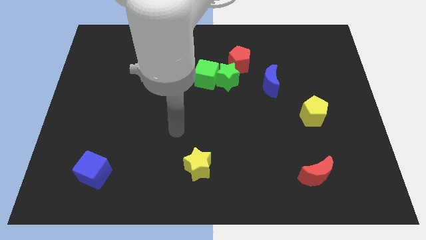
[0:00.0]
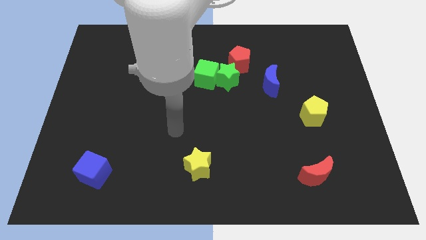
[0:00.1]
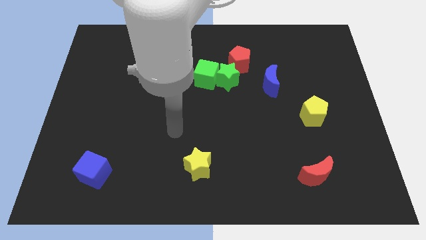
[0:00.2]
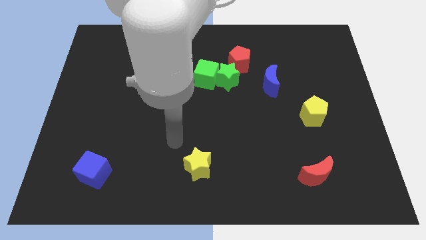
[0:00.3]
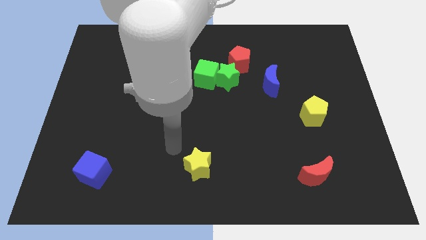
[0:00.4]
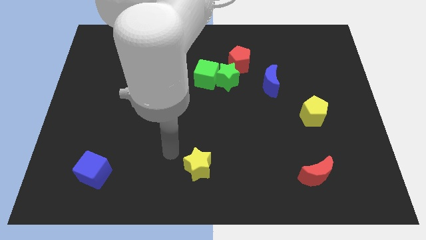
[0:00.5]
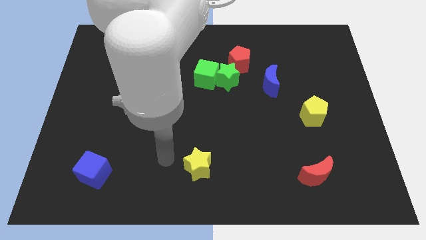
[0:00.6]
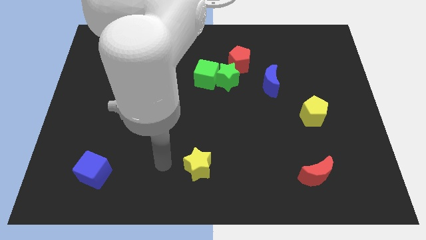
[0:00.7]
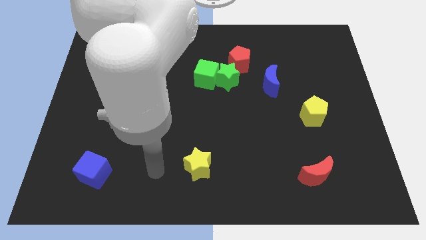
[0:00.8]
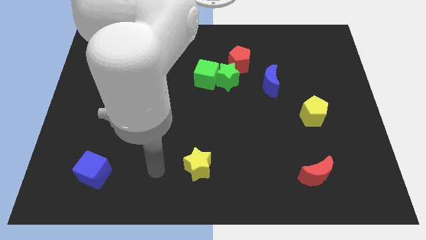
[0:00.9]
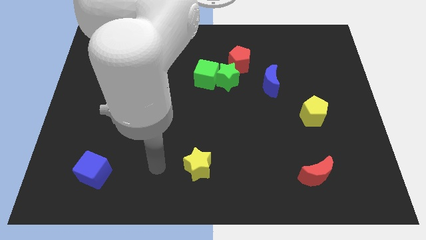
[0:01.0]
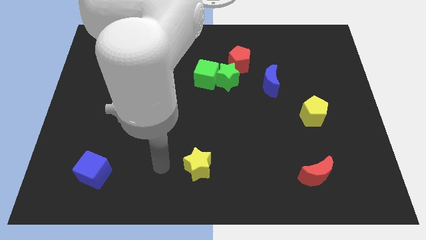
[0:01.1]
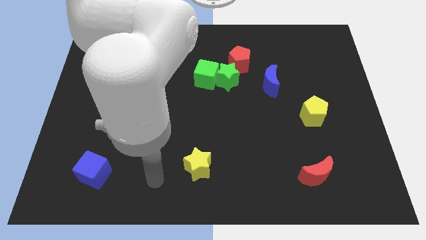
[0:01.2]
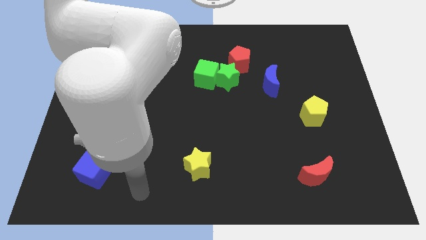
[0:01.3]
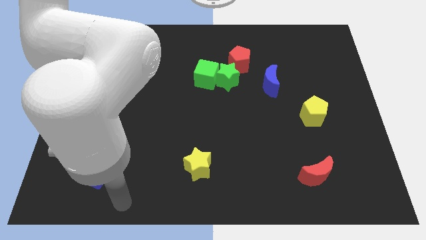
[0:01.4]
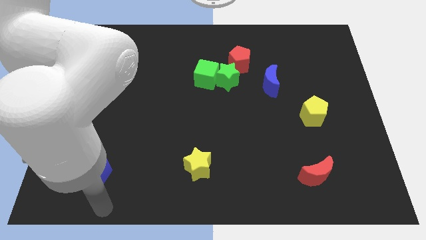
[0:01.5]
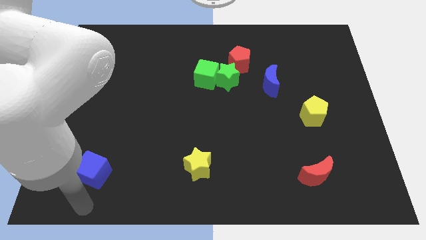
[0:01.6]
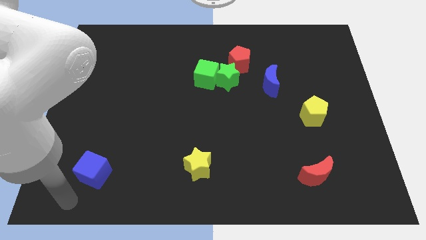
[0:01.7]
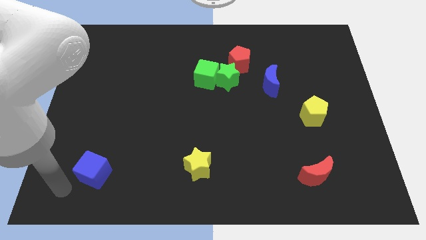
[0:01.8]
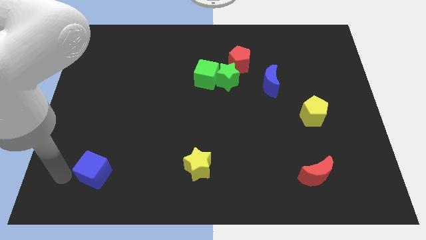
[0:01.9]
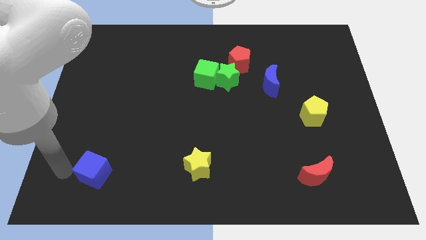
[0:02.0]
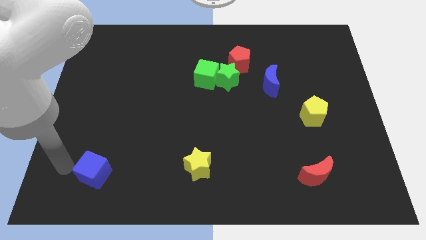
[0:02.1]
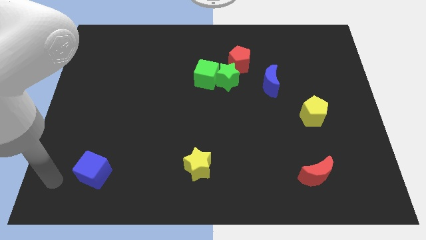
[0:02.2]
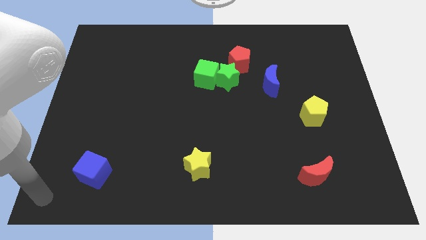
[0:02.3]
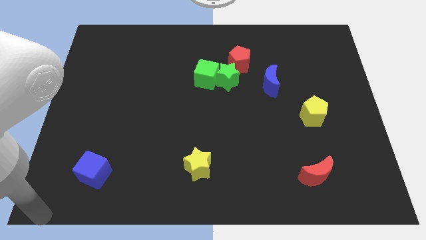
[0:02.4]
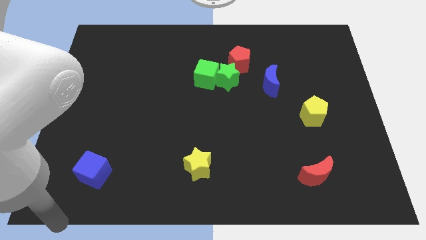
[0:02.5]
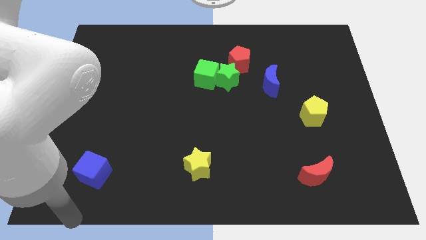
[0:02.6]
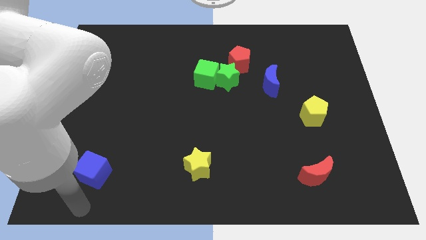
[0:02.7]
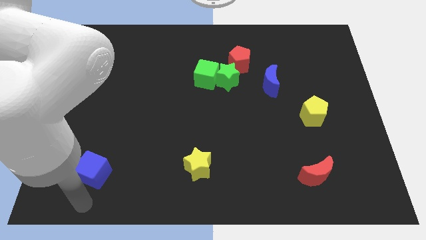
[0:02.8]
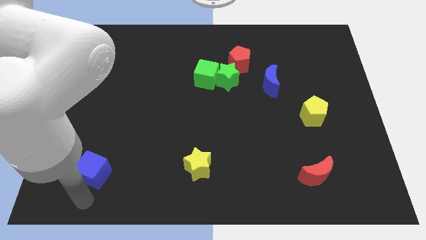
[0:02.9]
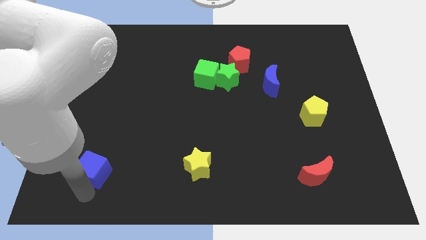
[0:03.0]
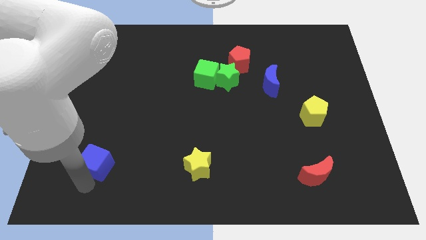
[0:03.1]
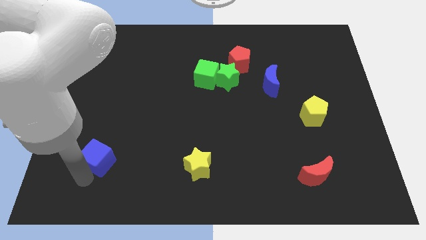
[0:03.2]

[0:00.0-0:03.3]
place blue cube parallel left to yellow star

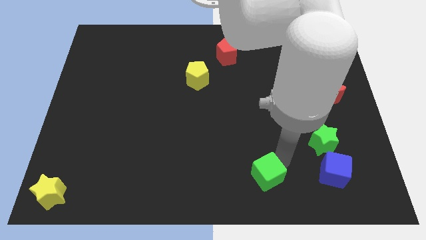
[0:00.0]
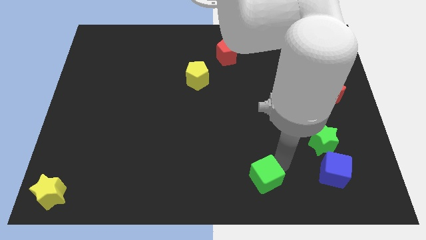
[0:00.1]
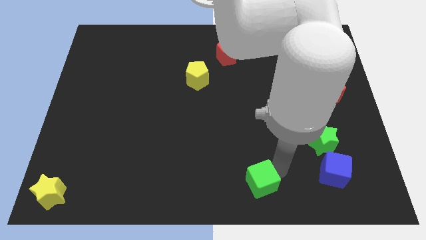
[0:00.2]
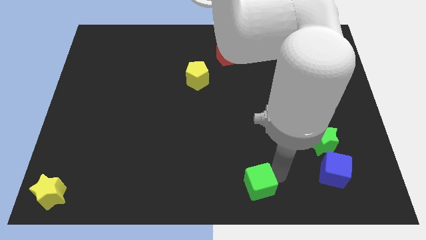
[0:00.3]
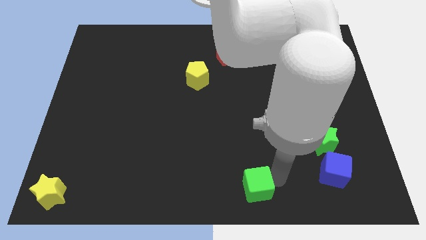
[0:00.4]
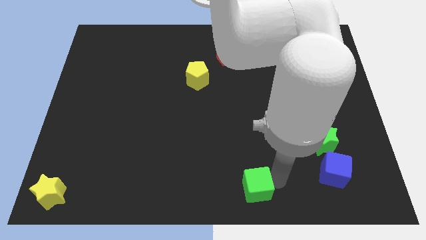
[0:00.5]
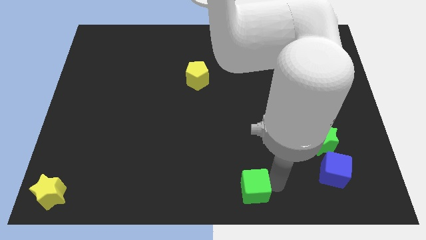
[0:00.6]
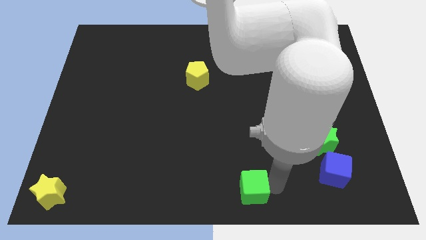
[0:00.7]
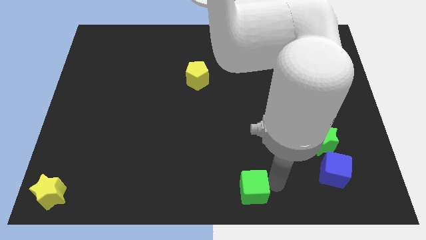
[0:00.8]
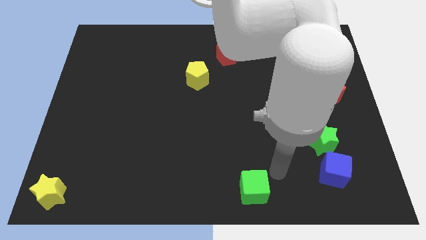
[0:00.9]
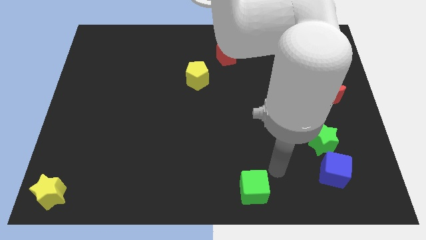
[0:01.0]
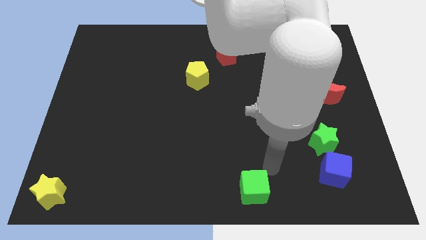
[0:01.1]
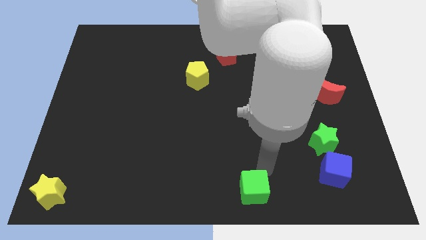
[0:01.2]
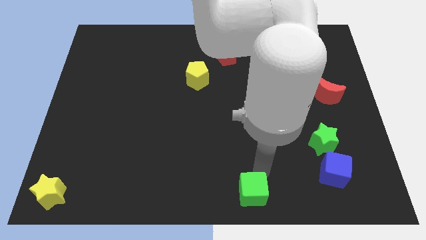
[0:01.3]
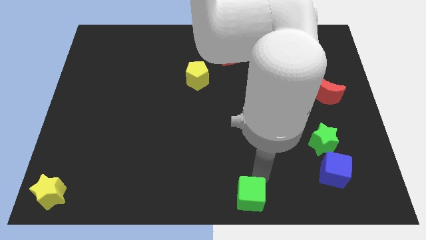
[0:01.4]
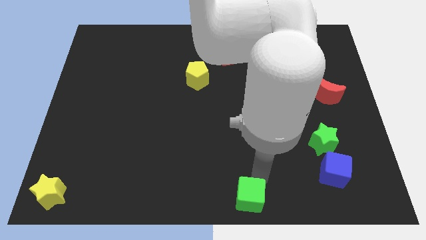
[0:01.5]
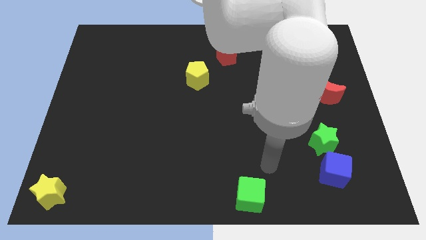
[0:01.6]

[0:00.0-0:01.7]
push the green cube towards the bottom center of the board

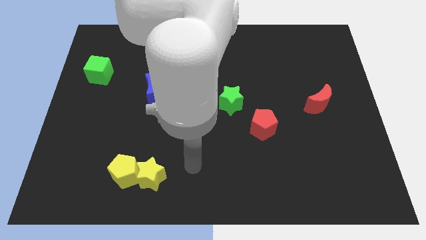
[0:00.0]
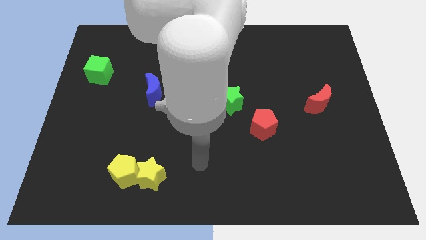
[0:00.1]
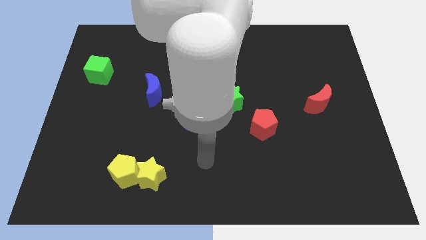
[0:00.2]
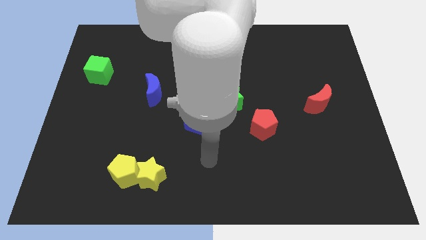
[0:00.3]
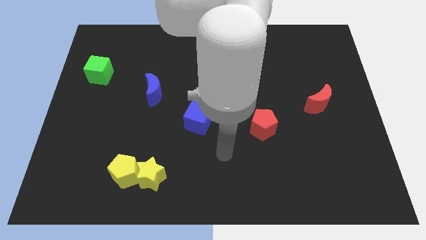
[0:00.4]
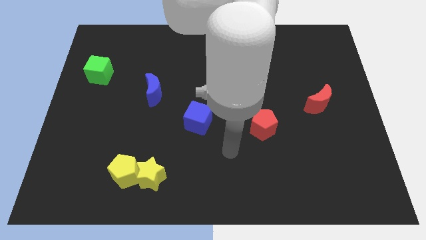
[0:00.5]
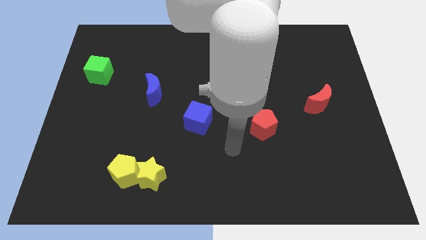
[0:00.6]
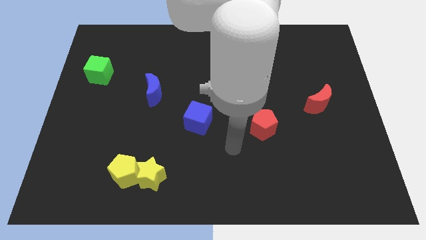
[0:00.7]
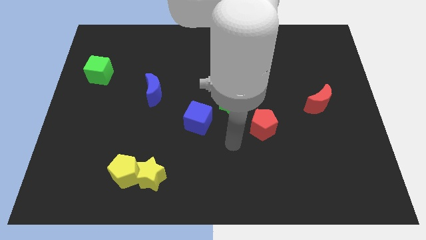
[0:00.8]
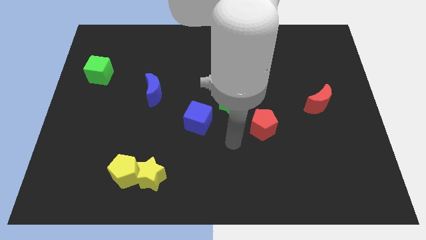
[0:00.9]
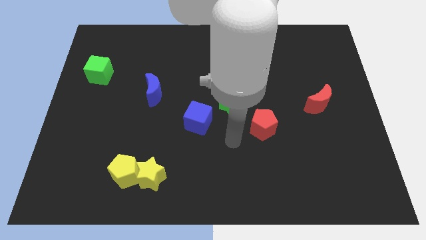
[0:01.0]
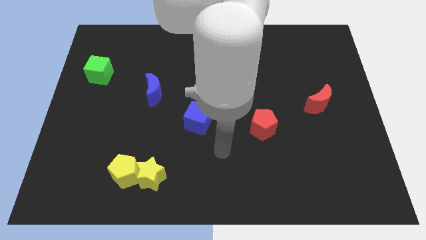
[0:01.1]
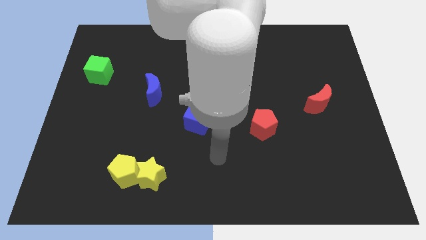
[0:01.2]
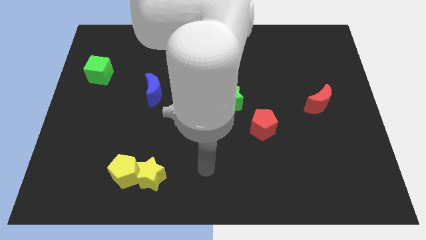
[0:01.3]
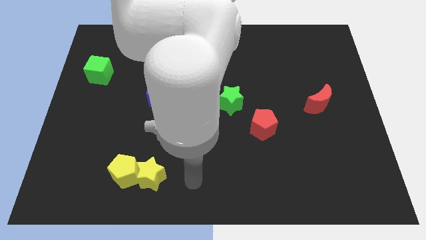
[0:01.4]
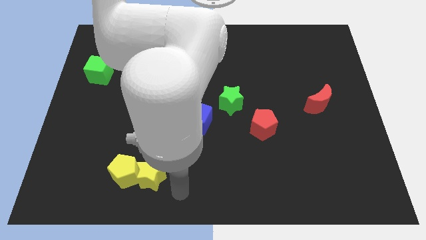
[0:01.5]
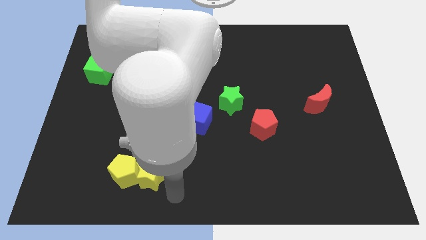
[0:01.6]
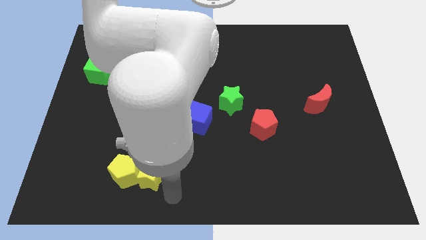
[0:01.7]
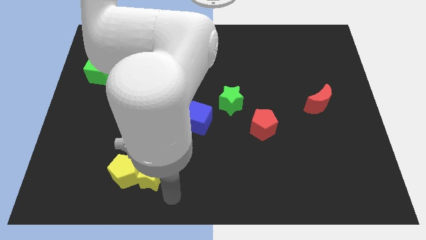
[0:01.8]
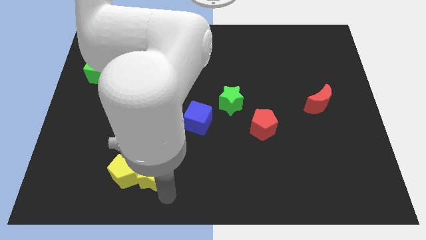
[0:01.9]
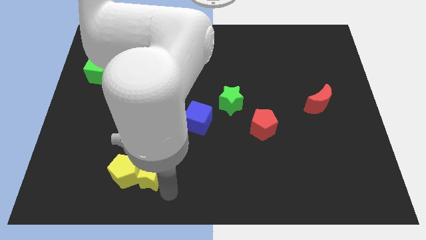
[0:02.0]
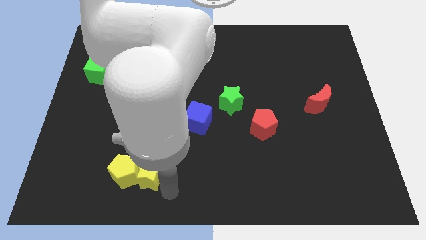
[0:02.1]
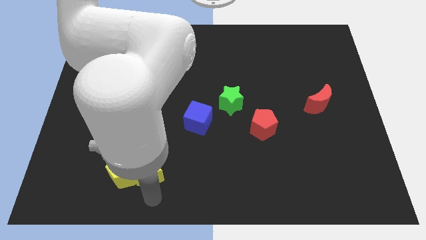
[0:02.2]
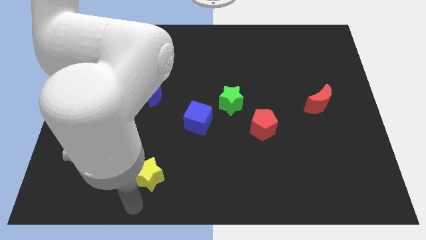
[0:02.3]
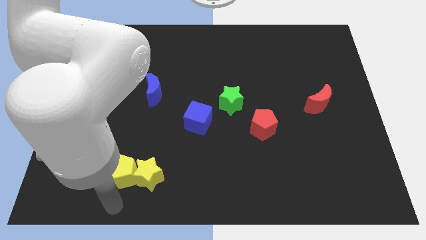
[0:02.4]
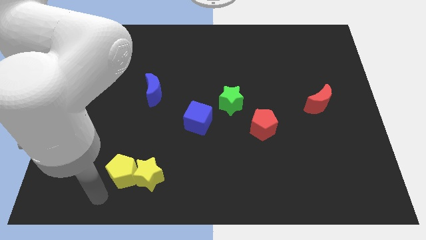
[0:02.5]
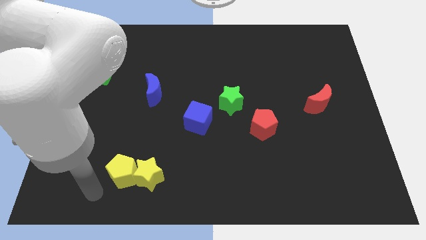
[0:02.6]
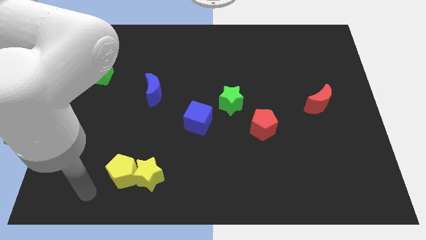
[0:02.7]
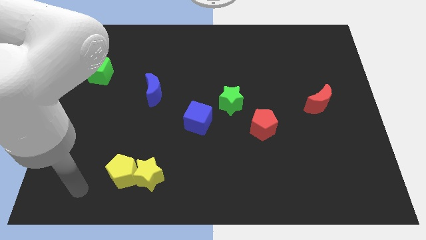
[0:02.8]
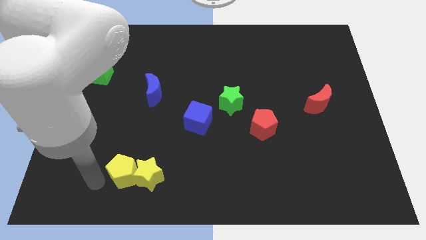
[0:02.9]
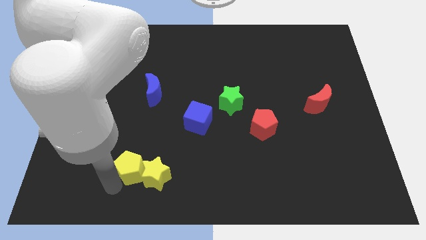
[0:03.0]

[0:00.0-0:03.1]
touch the yellow pentagon

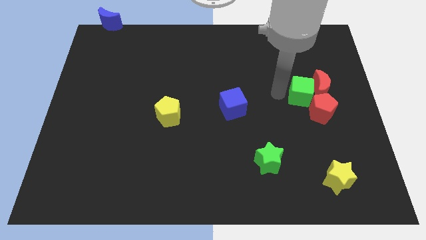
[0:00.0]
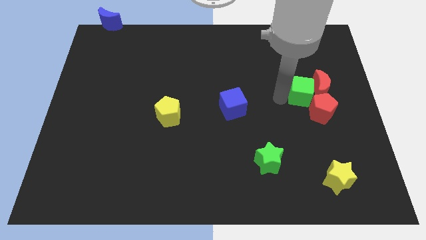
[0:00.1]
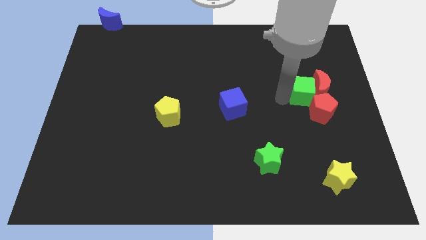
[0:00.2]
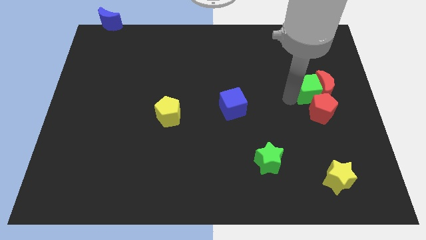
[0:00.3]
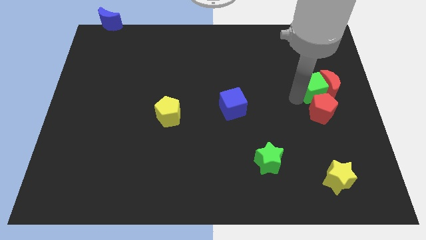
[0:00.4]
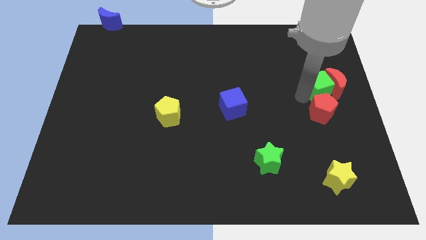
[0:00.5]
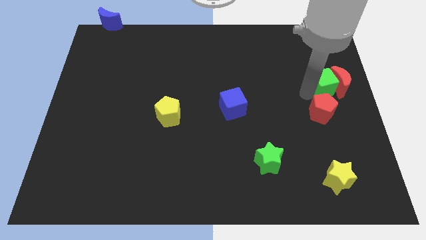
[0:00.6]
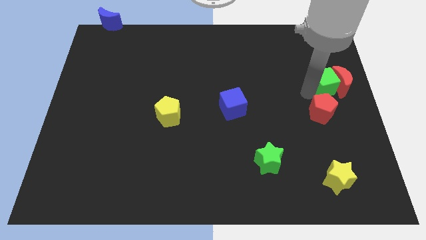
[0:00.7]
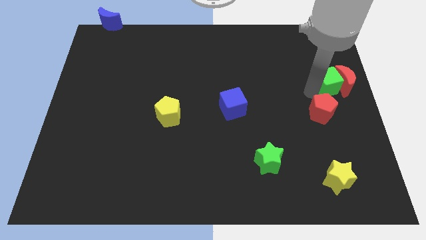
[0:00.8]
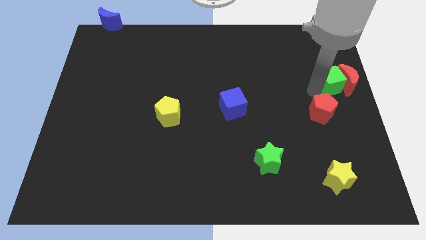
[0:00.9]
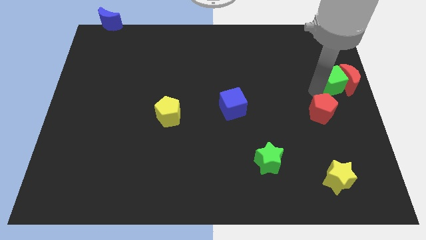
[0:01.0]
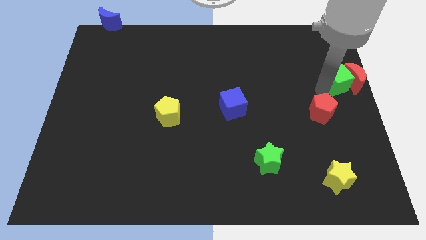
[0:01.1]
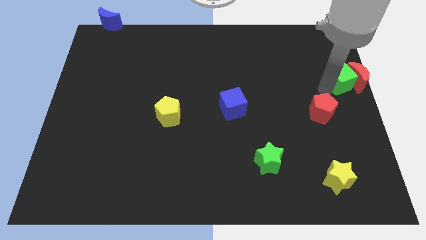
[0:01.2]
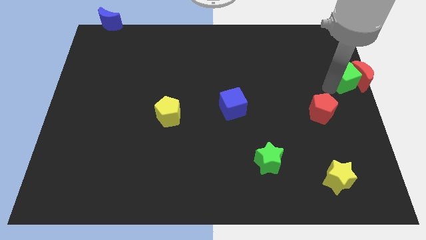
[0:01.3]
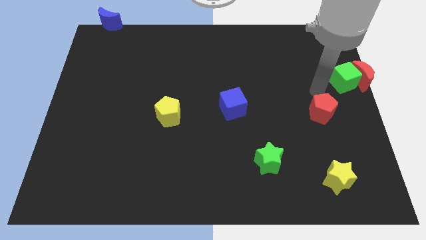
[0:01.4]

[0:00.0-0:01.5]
push the green cube and red crescent to the right center of the board
